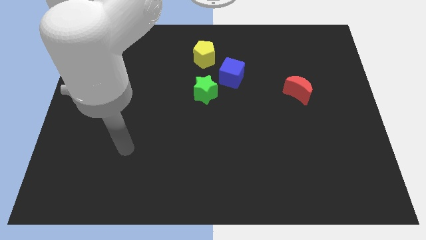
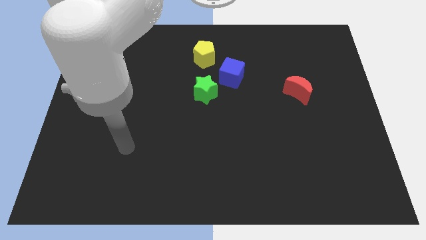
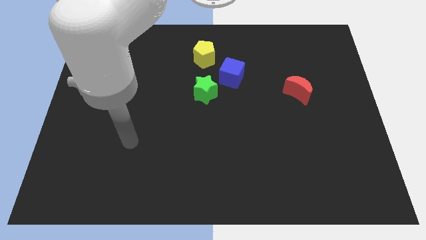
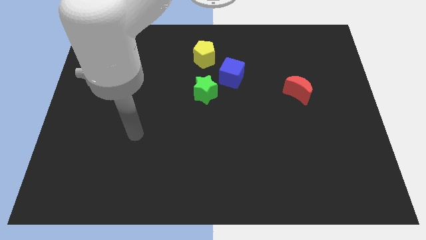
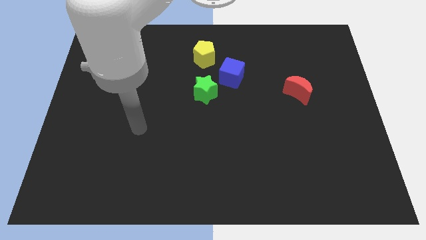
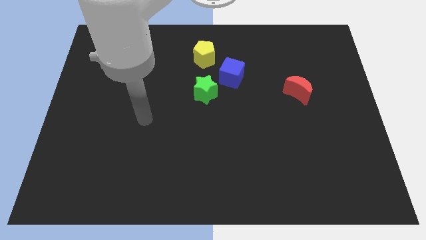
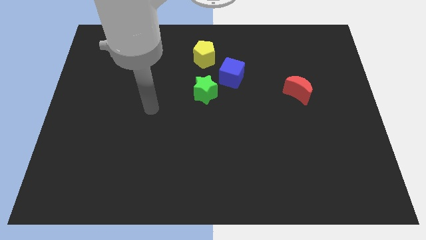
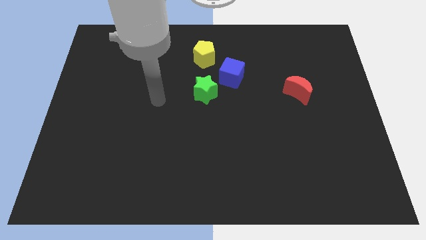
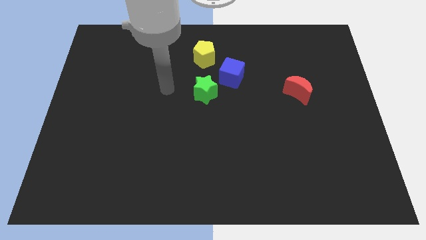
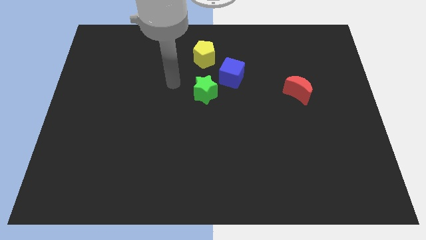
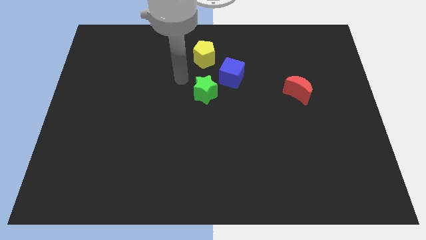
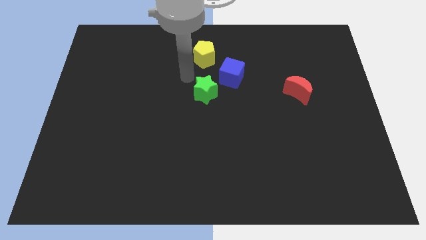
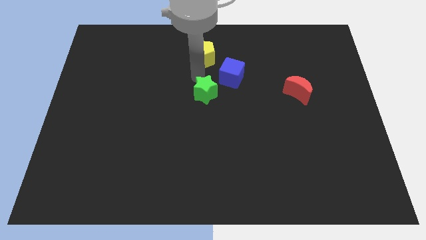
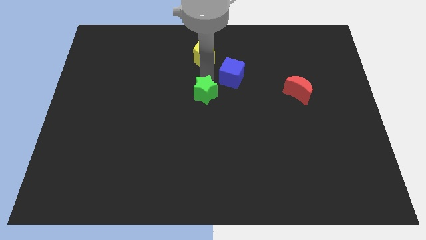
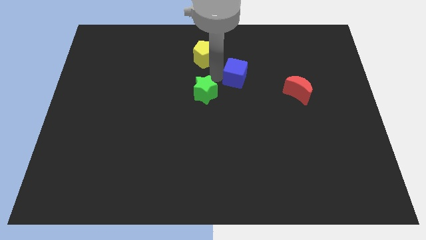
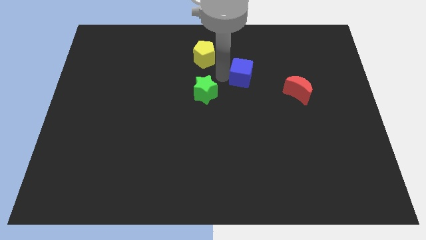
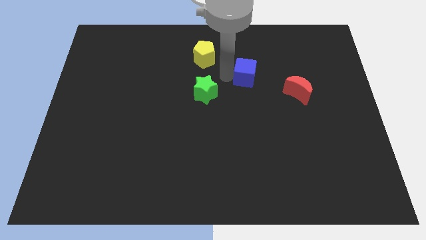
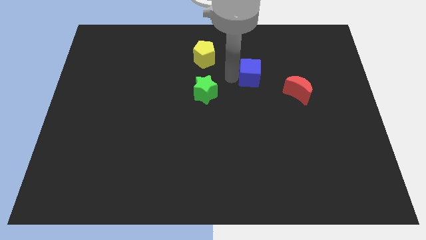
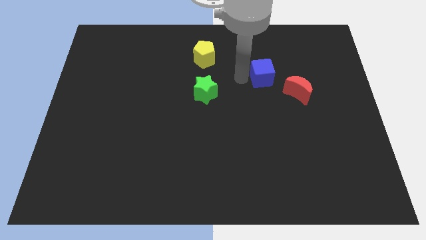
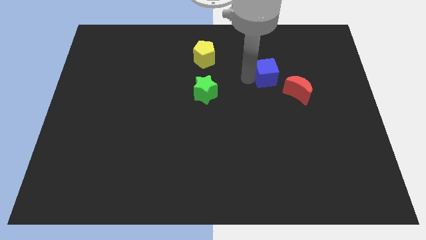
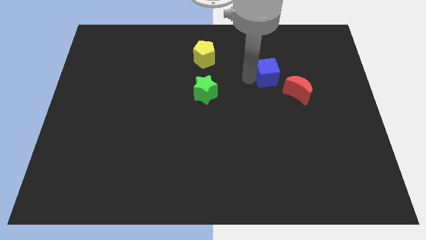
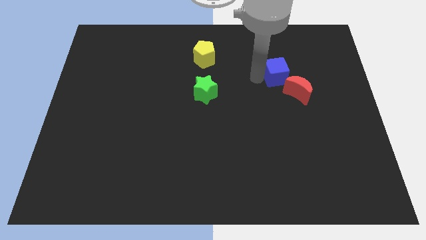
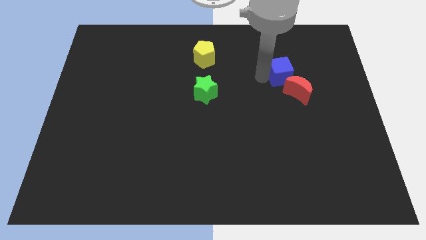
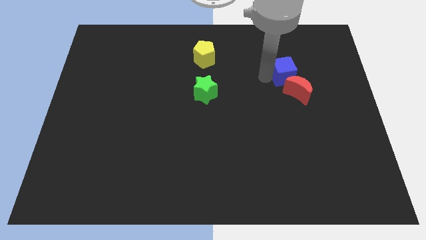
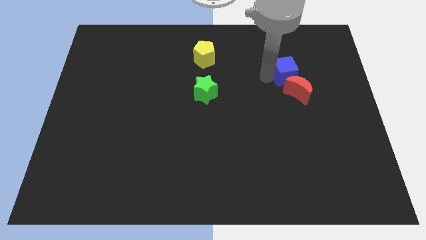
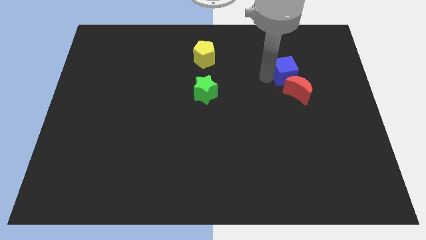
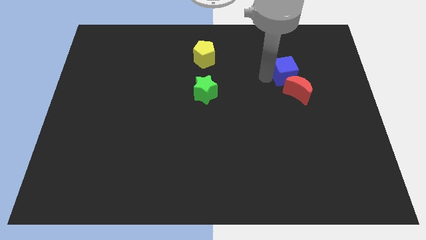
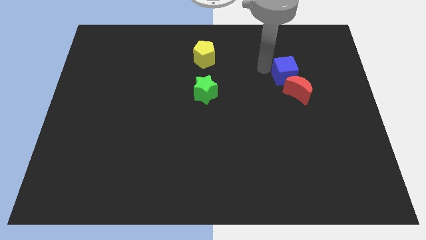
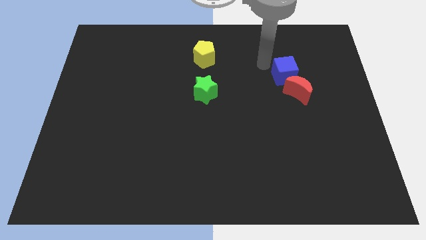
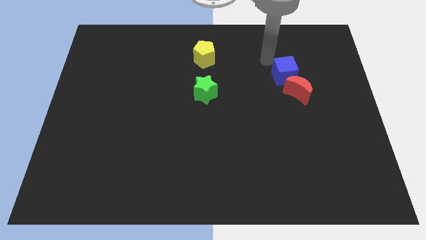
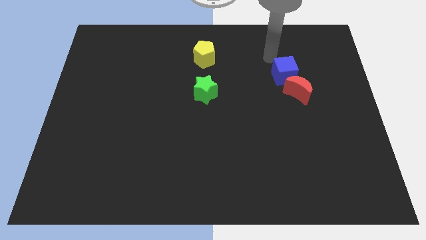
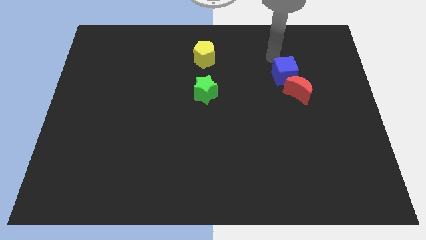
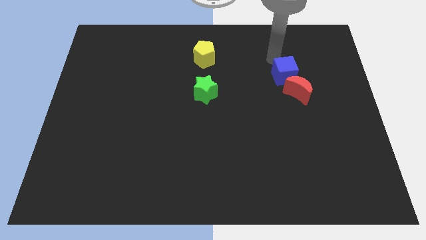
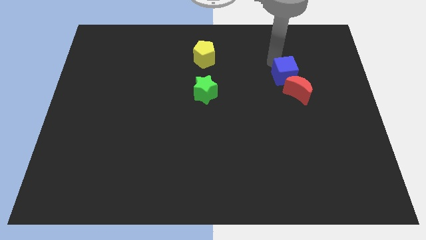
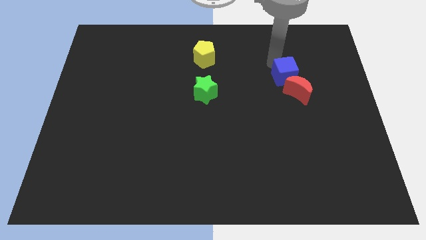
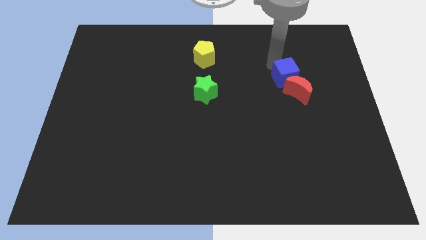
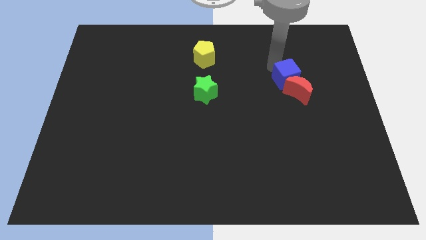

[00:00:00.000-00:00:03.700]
put the blue cube towards the red block

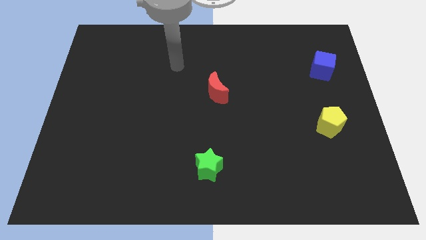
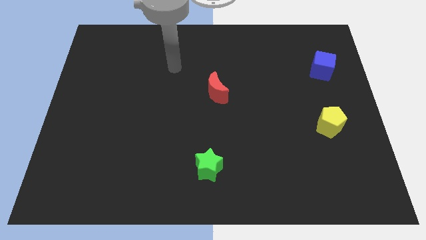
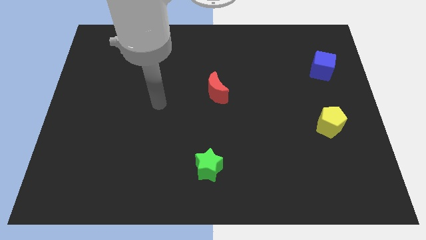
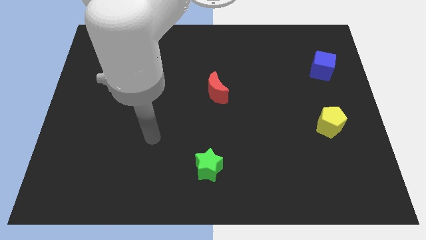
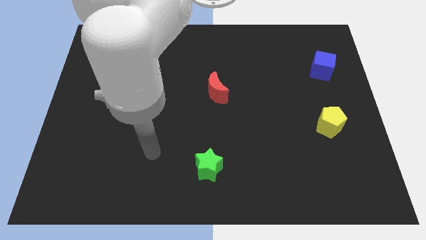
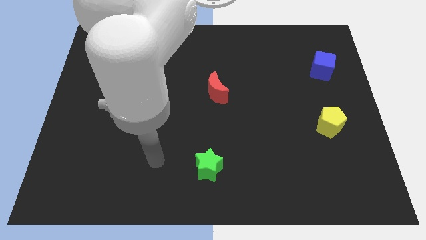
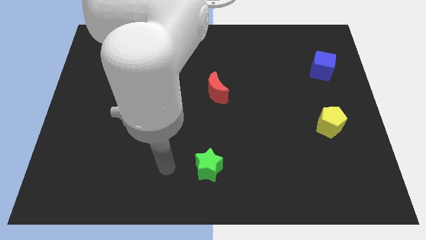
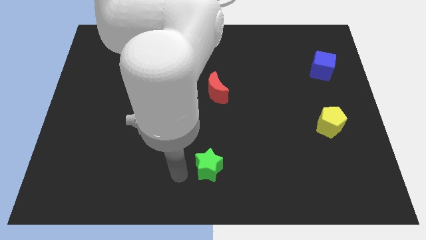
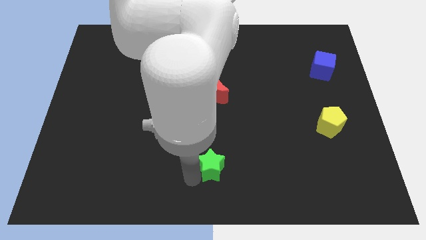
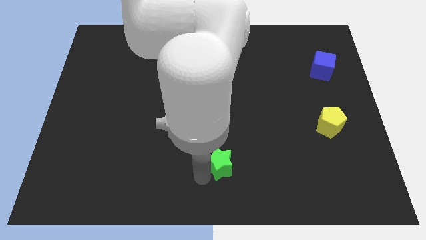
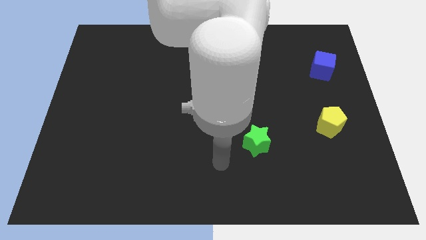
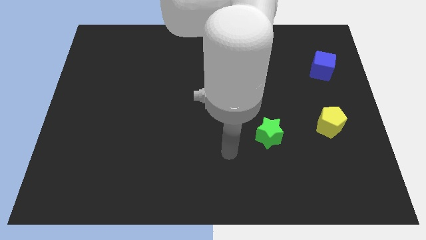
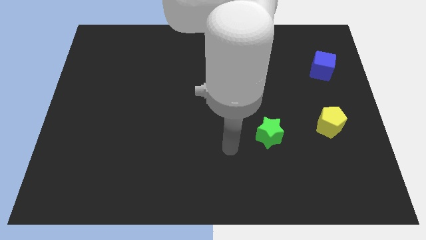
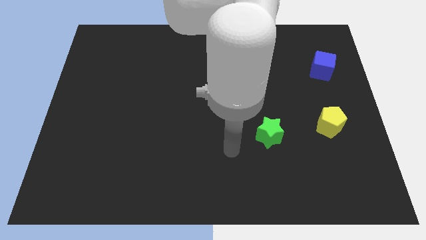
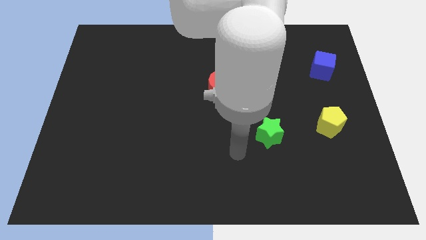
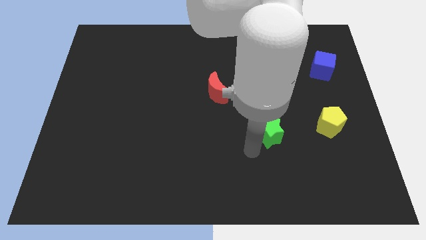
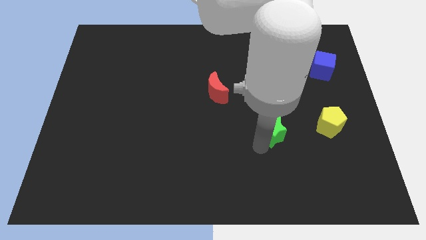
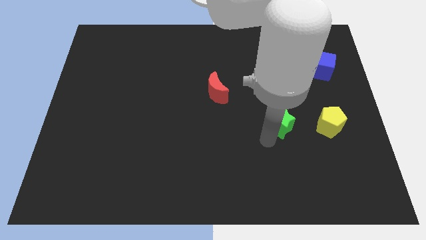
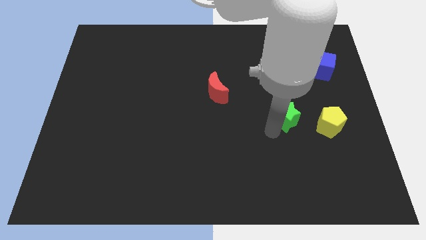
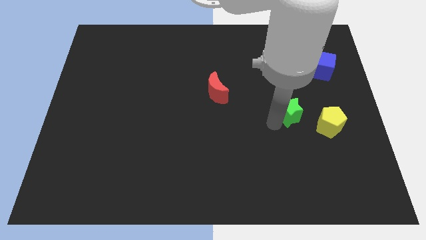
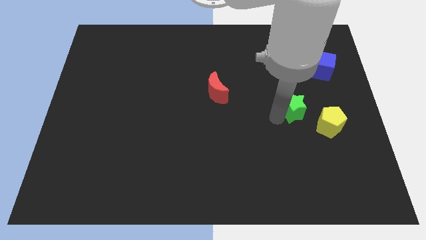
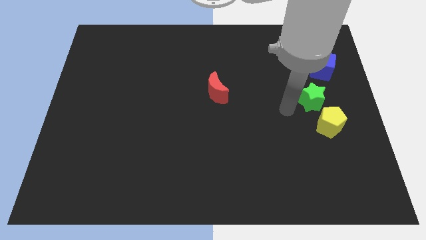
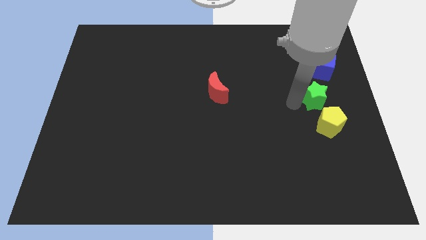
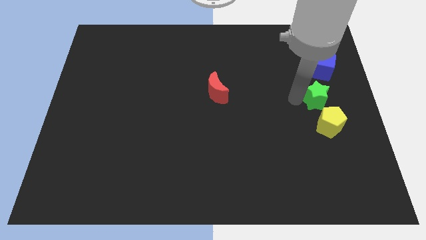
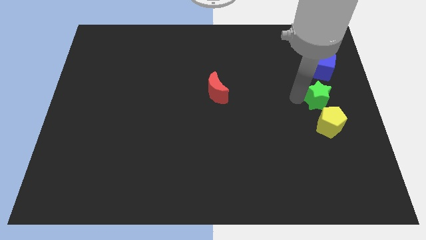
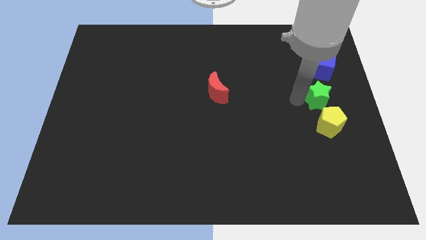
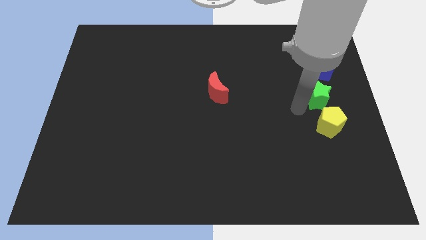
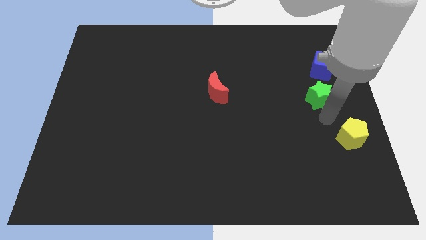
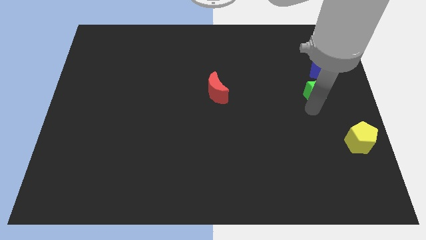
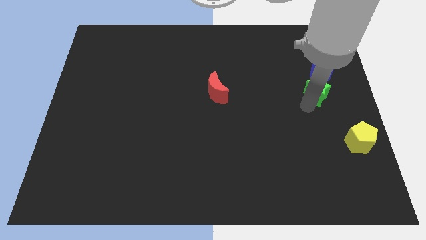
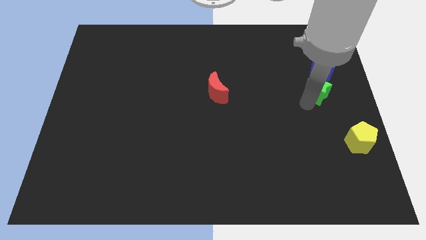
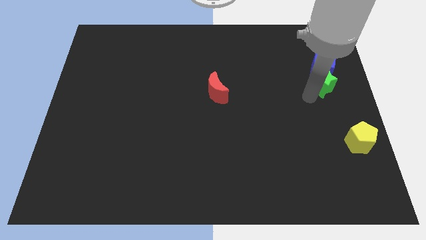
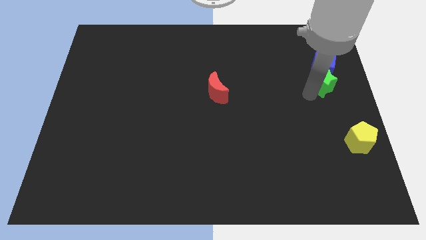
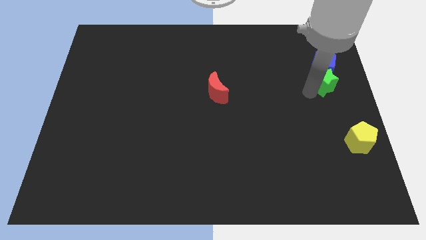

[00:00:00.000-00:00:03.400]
move the star towards the cube

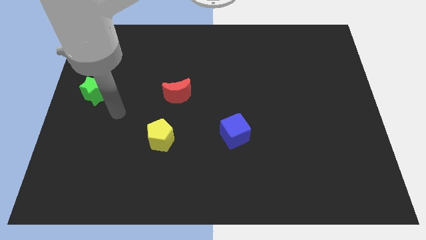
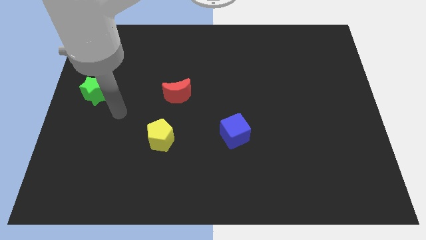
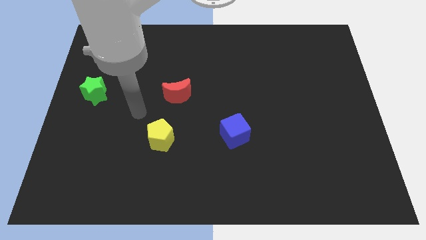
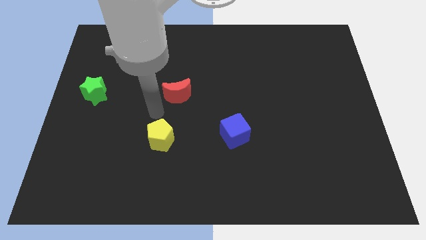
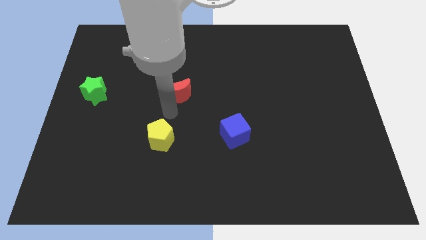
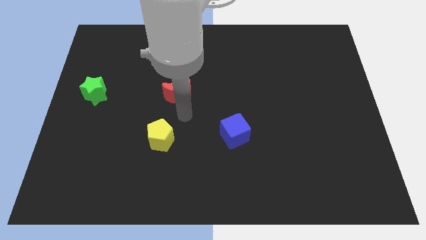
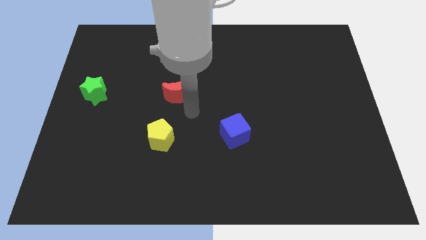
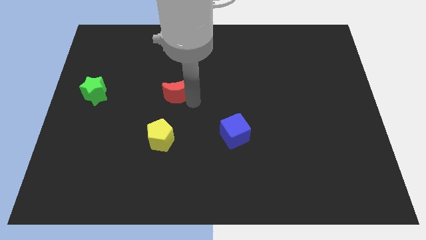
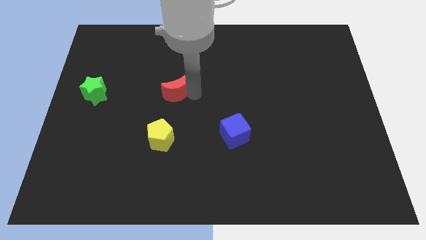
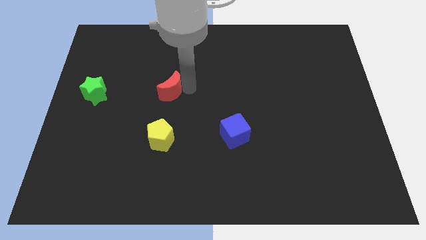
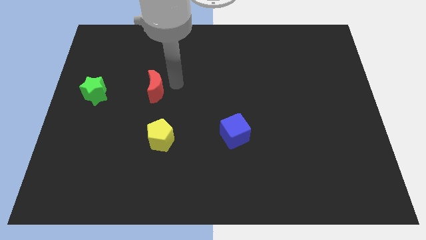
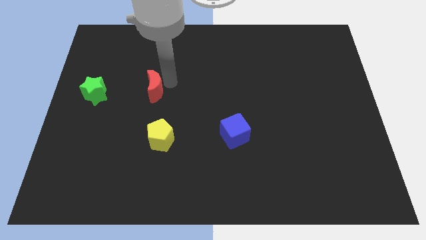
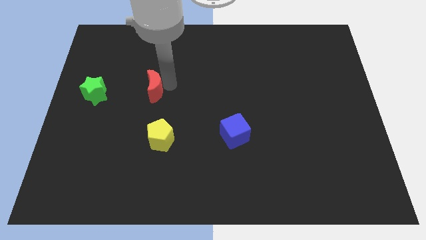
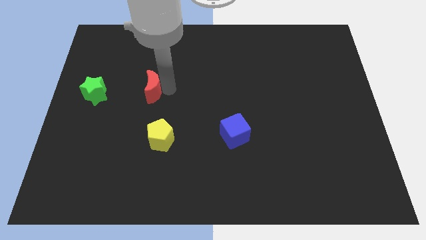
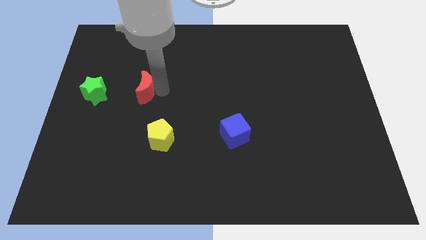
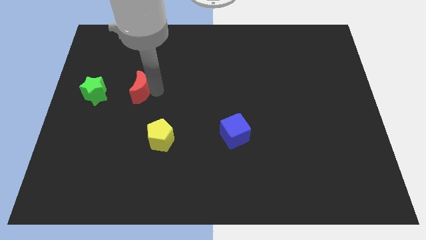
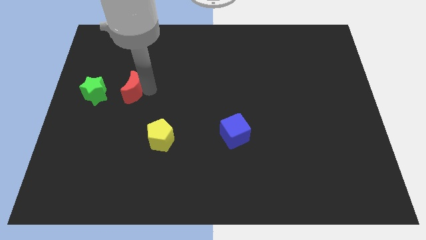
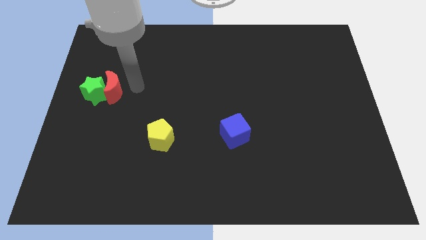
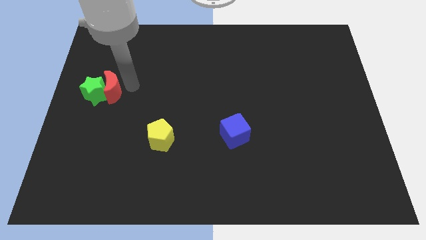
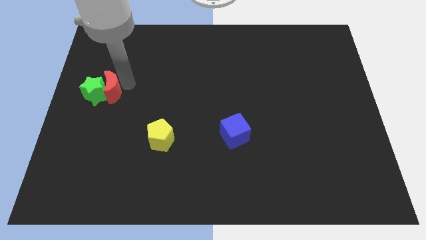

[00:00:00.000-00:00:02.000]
move the red block towards the star
